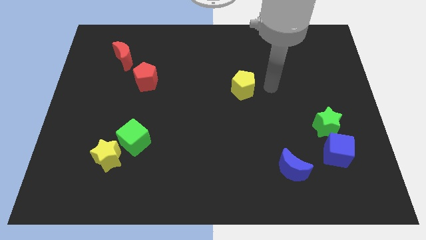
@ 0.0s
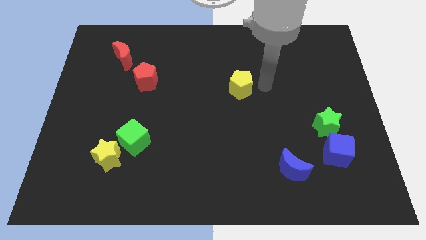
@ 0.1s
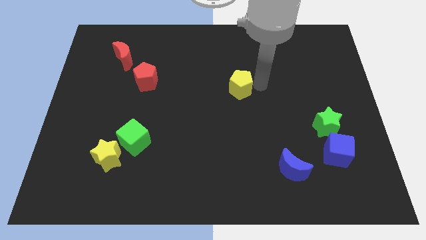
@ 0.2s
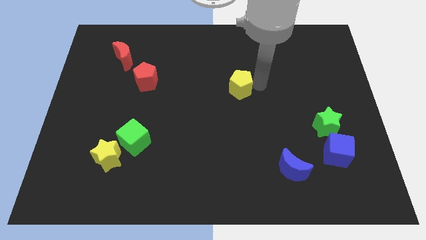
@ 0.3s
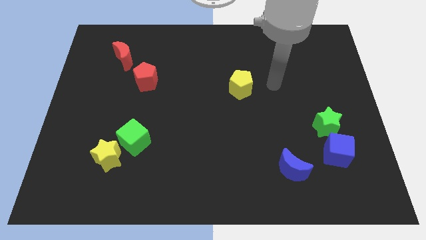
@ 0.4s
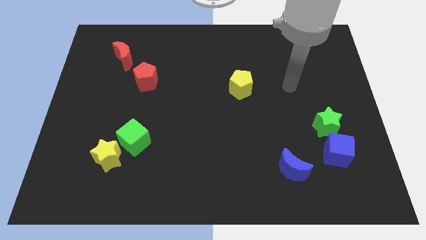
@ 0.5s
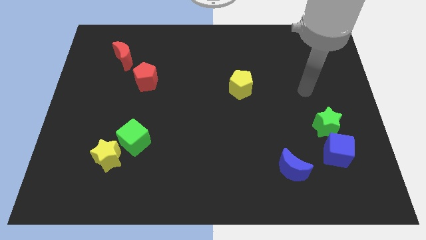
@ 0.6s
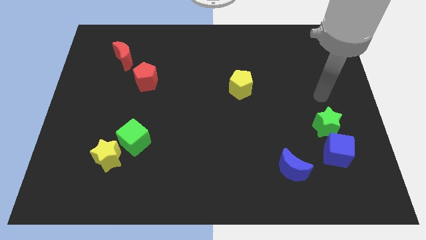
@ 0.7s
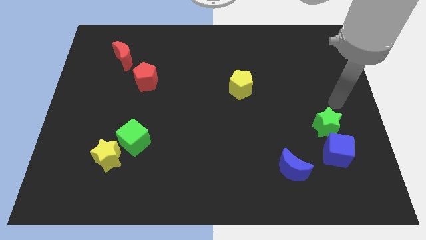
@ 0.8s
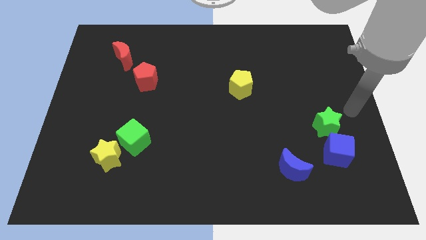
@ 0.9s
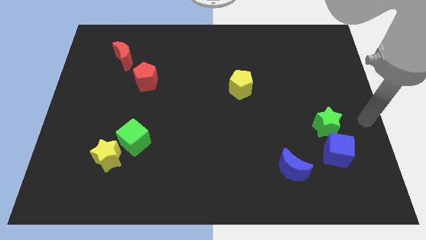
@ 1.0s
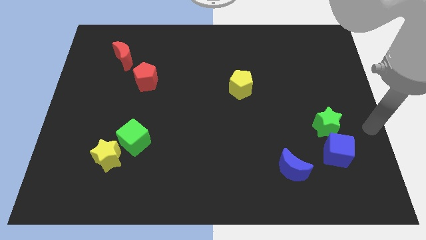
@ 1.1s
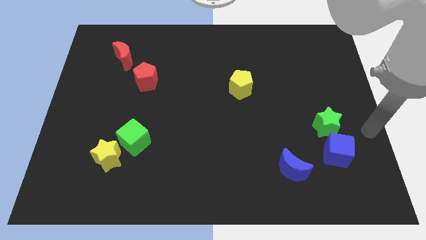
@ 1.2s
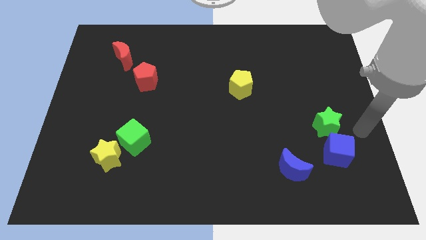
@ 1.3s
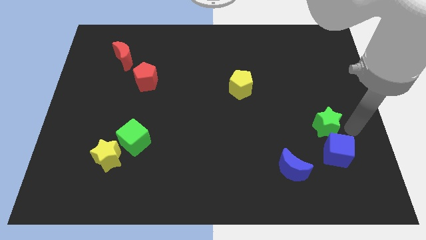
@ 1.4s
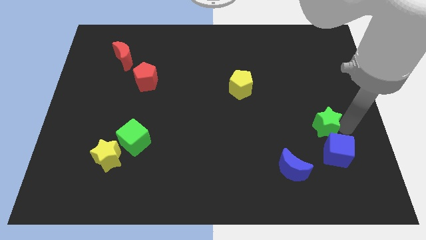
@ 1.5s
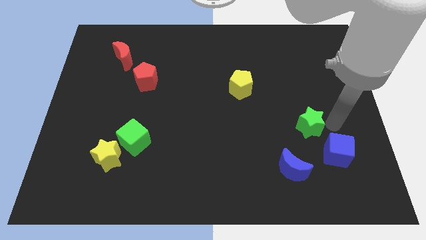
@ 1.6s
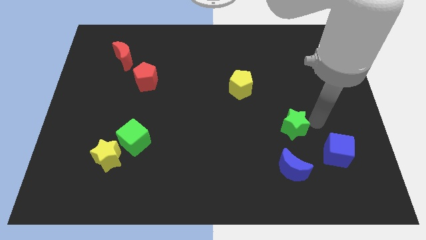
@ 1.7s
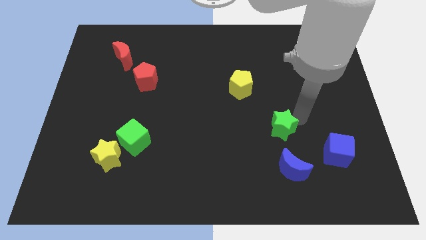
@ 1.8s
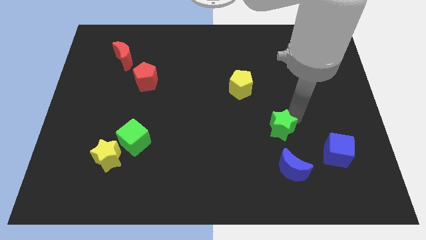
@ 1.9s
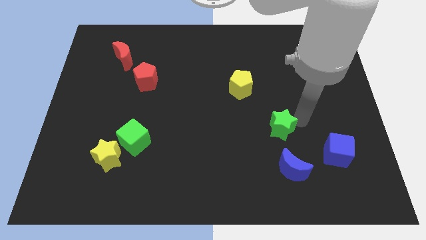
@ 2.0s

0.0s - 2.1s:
place green star above the blue moon

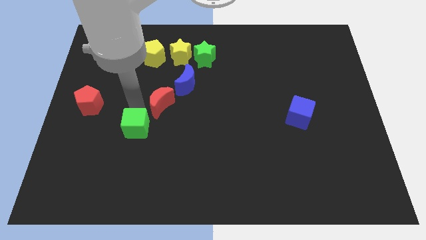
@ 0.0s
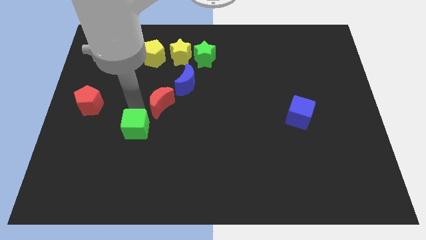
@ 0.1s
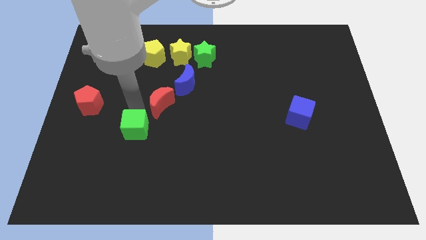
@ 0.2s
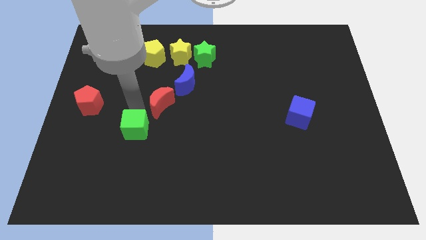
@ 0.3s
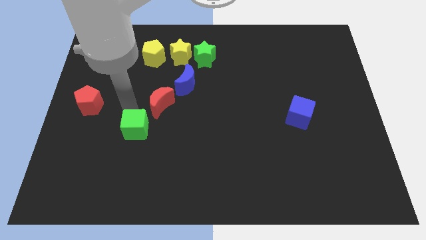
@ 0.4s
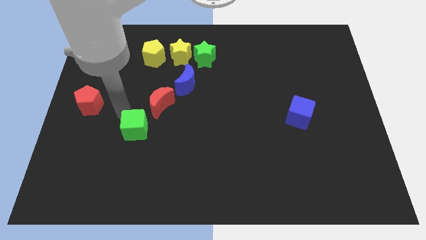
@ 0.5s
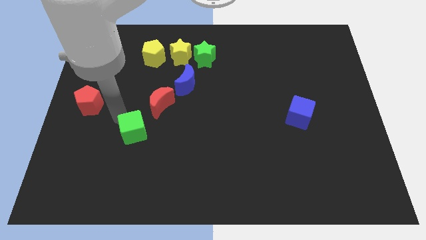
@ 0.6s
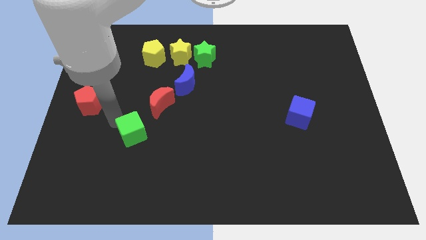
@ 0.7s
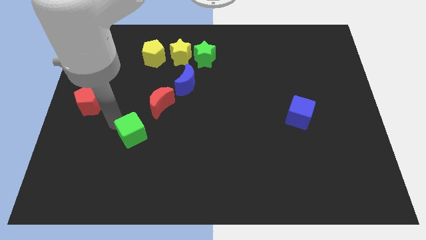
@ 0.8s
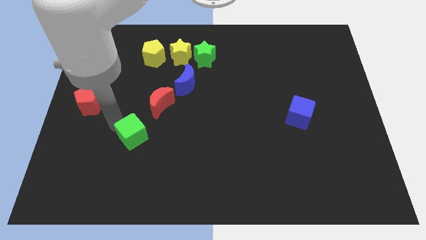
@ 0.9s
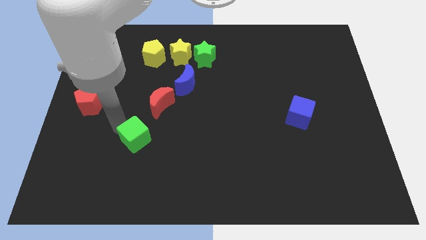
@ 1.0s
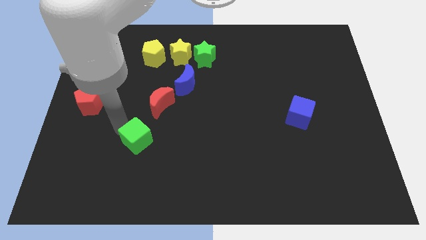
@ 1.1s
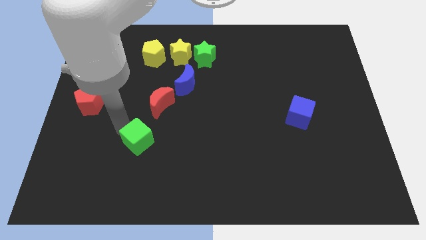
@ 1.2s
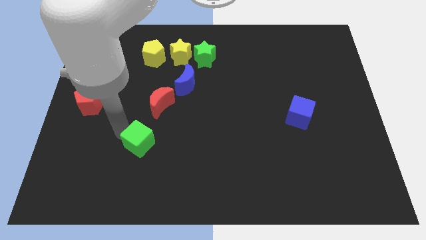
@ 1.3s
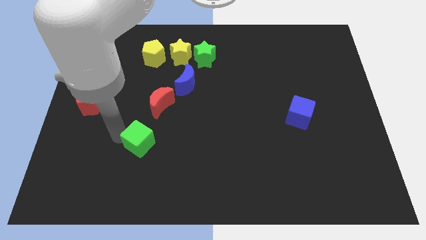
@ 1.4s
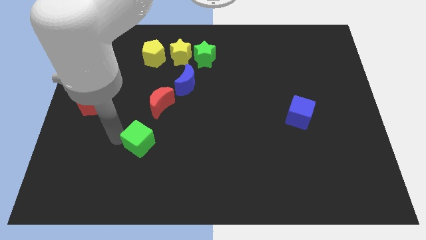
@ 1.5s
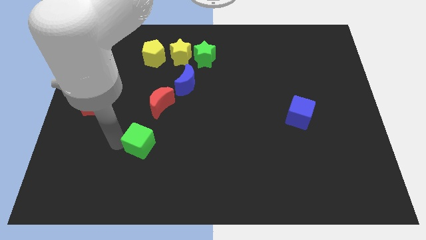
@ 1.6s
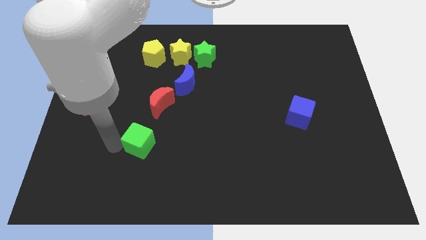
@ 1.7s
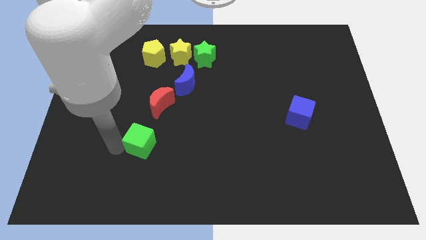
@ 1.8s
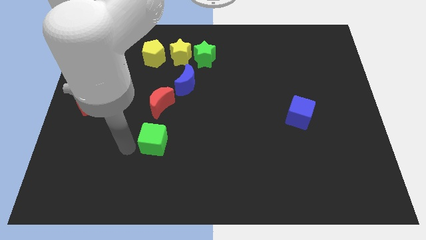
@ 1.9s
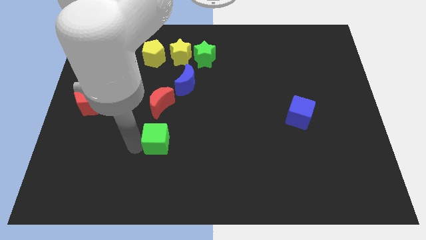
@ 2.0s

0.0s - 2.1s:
place the green cube below the red crescent

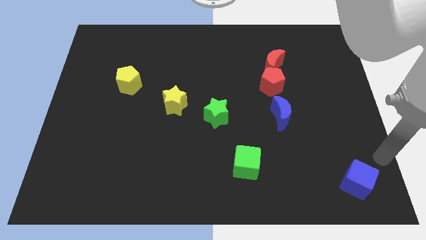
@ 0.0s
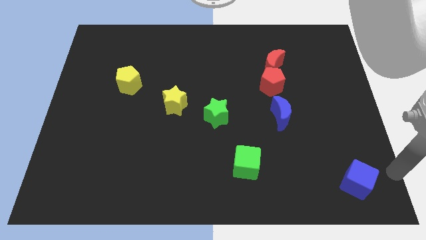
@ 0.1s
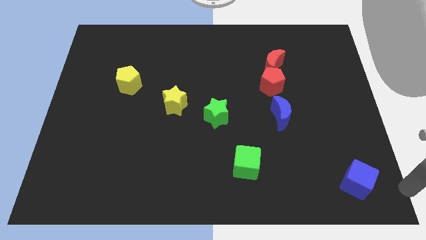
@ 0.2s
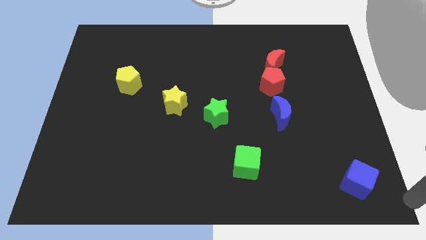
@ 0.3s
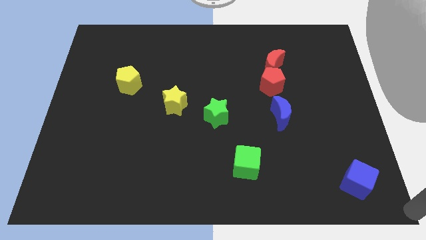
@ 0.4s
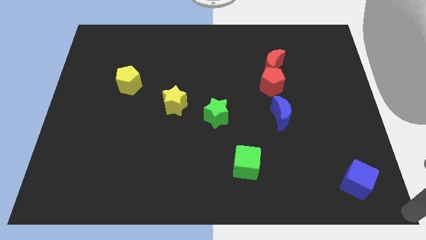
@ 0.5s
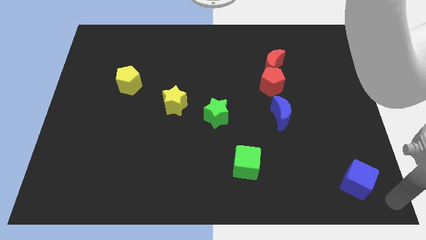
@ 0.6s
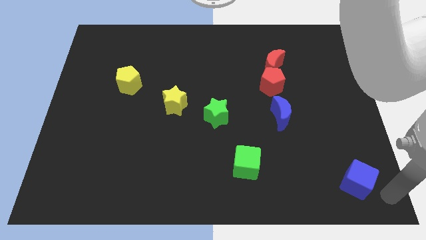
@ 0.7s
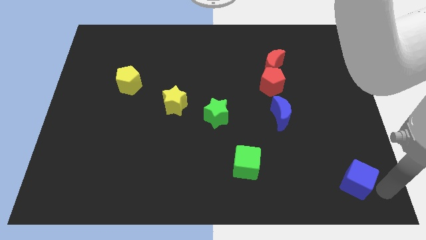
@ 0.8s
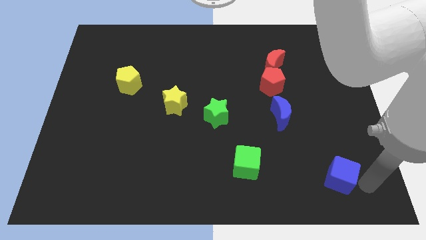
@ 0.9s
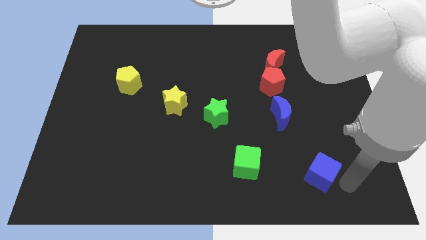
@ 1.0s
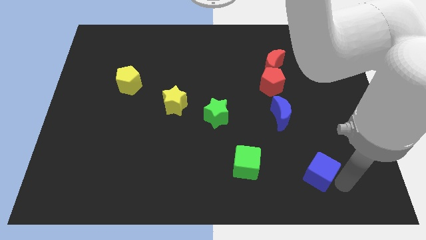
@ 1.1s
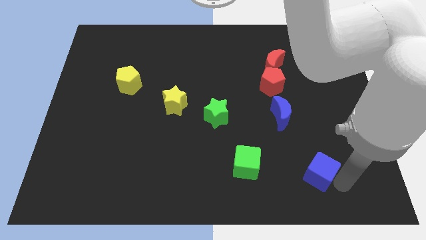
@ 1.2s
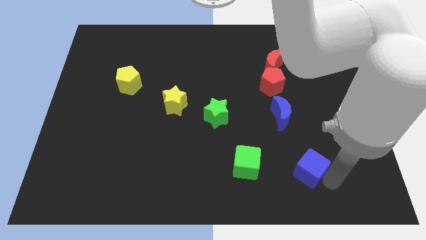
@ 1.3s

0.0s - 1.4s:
move the blue cube to the right of the green cube

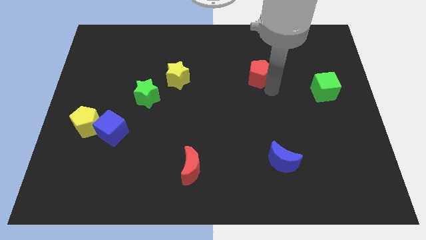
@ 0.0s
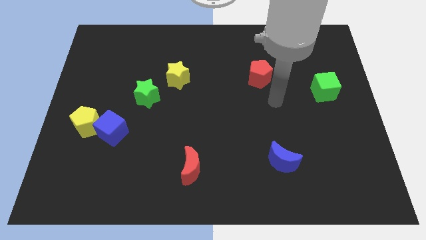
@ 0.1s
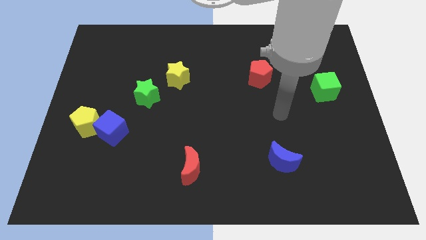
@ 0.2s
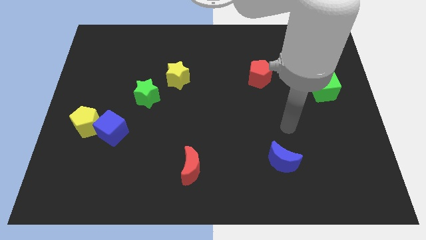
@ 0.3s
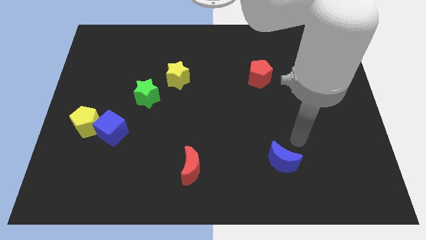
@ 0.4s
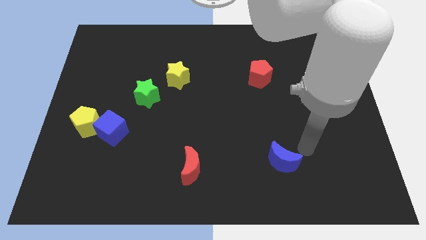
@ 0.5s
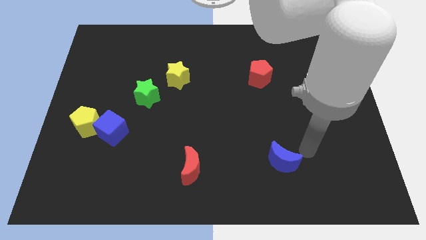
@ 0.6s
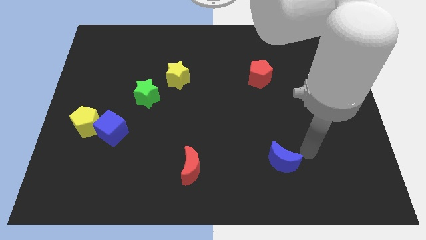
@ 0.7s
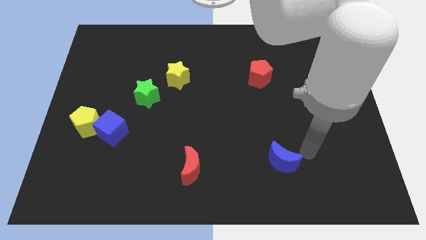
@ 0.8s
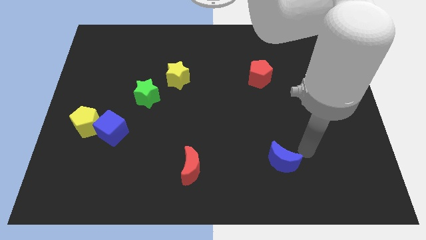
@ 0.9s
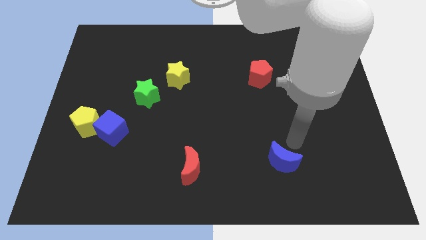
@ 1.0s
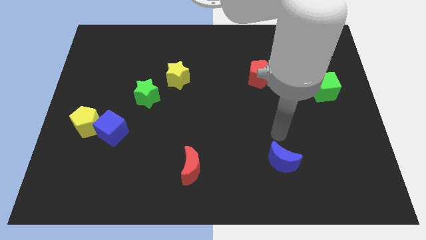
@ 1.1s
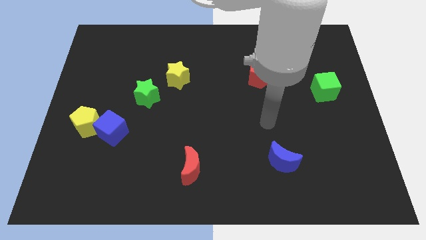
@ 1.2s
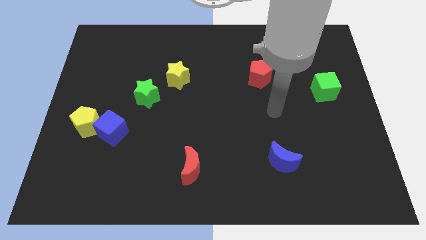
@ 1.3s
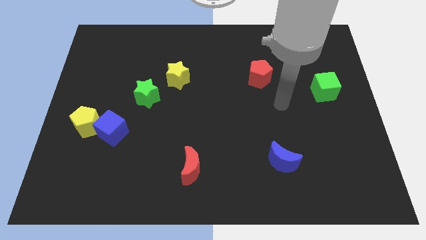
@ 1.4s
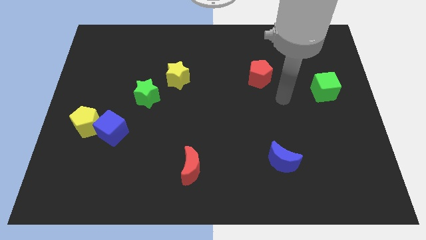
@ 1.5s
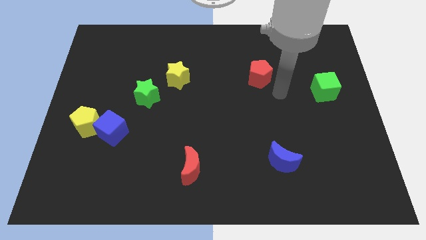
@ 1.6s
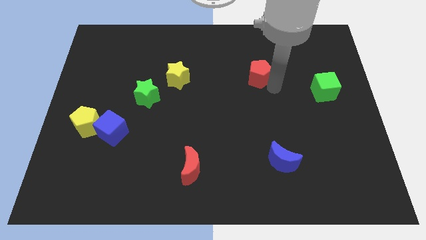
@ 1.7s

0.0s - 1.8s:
point your arm towards red pentagon

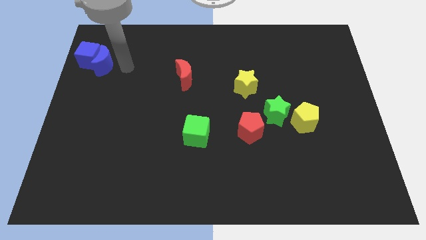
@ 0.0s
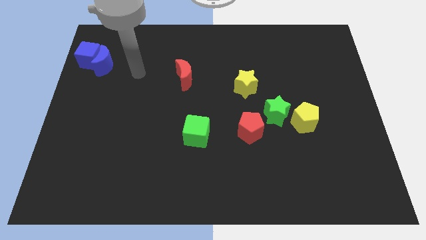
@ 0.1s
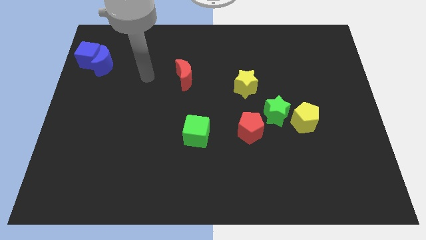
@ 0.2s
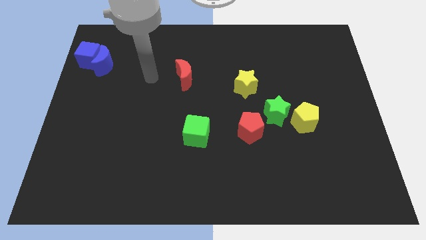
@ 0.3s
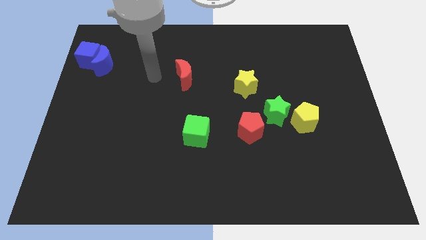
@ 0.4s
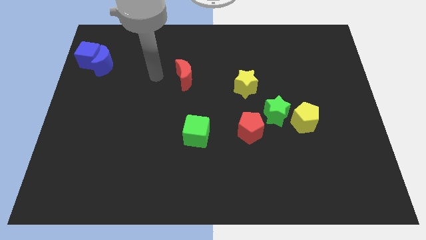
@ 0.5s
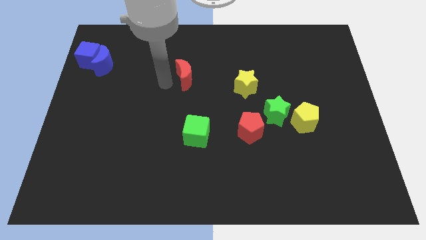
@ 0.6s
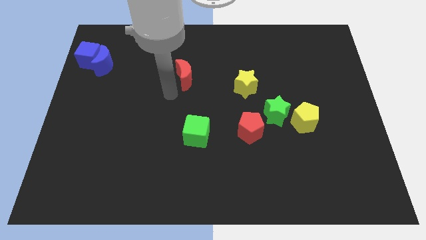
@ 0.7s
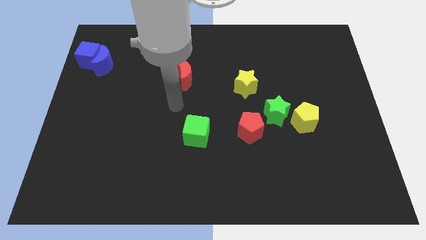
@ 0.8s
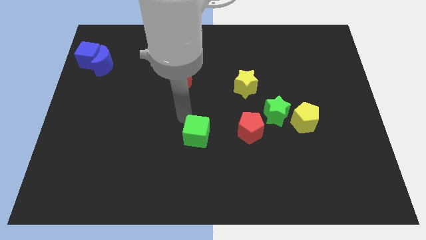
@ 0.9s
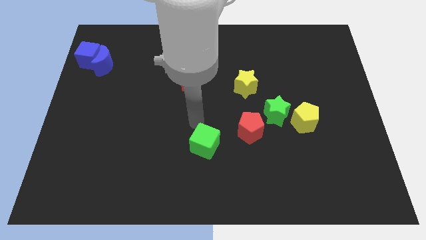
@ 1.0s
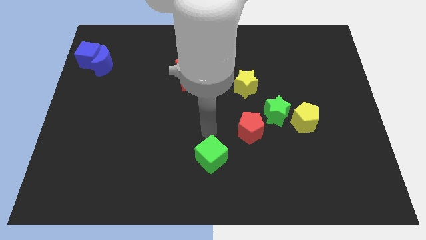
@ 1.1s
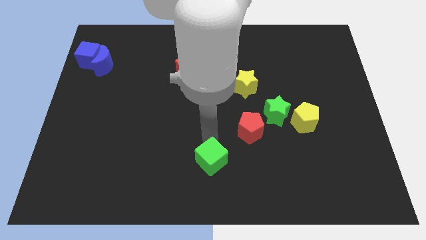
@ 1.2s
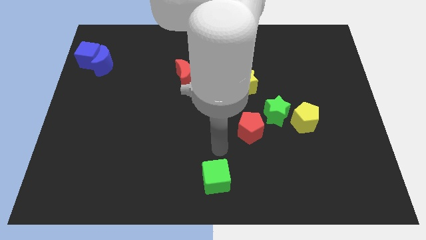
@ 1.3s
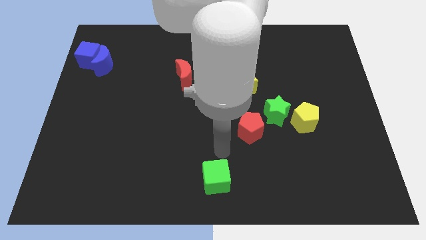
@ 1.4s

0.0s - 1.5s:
move the green cube to the bottom center of the board

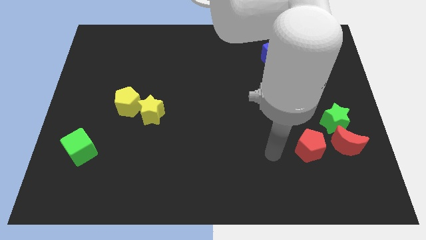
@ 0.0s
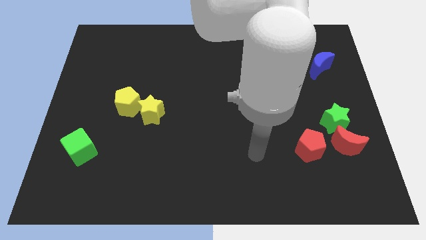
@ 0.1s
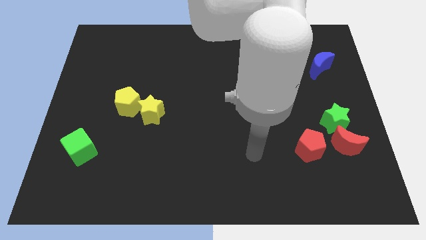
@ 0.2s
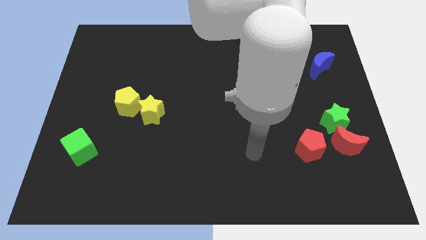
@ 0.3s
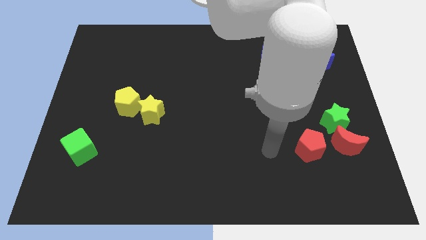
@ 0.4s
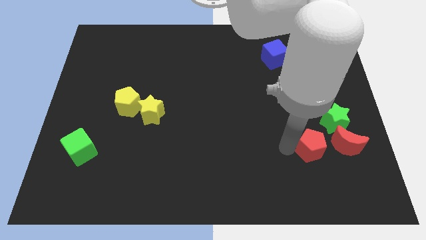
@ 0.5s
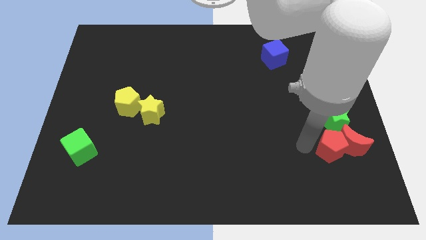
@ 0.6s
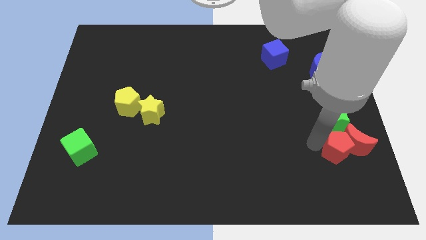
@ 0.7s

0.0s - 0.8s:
move the red pentagon into red crescent
